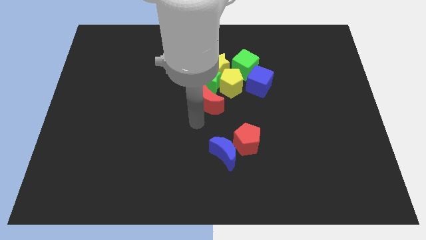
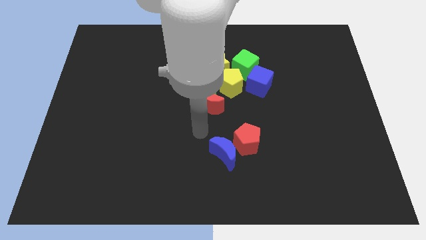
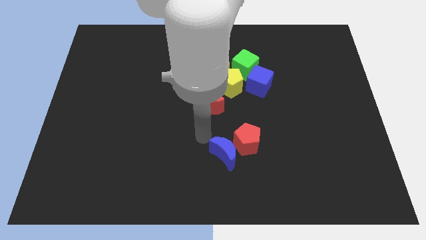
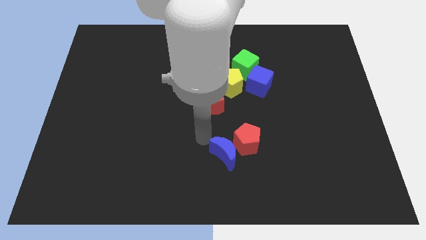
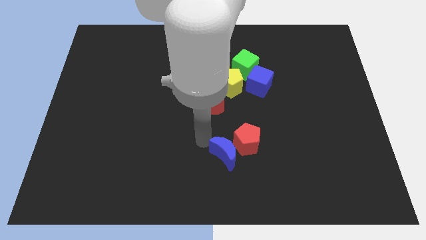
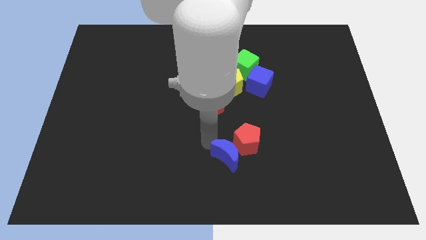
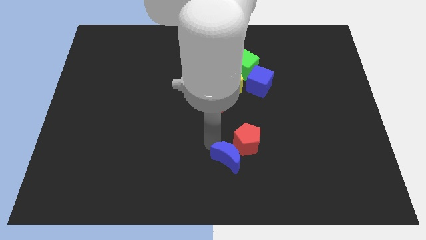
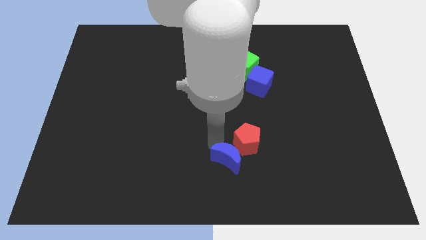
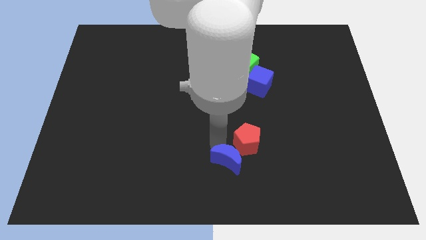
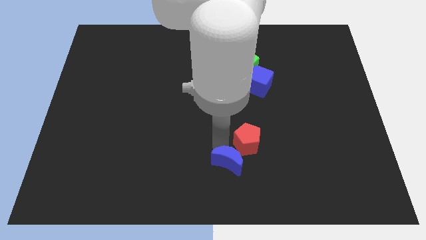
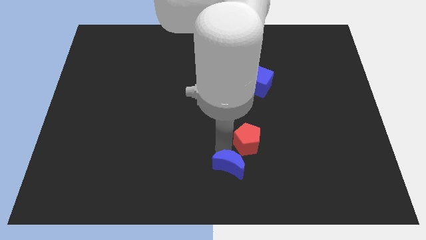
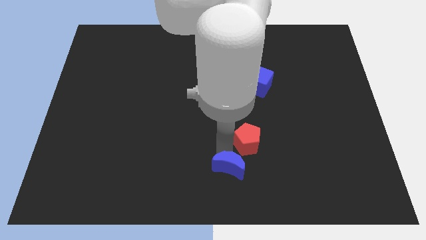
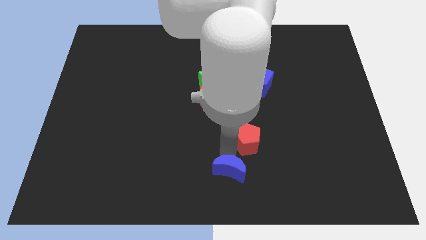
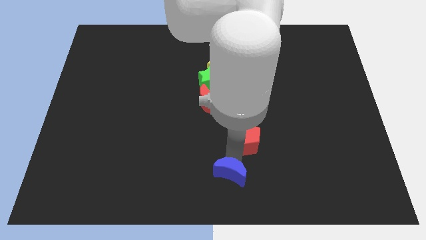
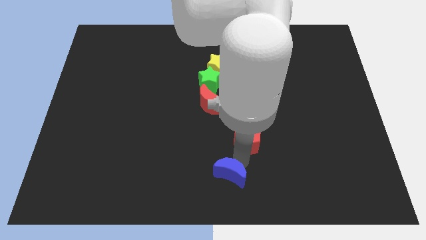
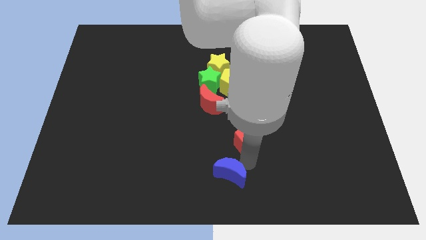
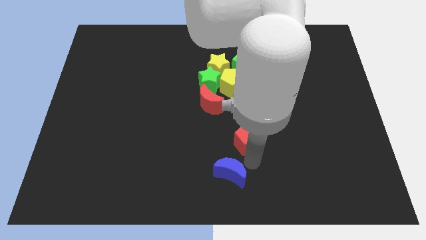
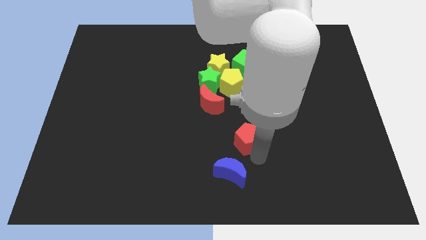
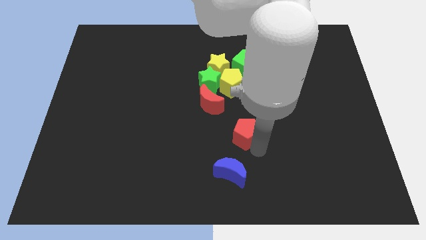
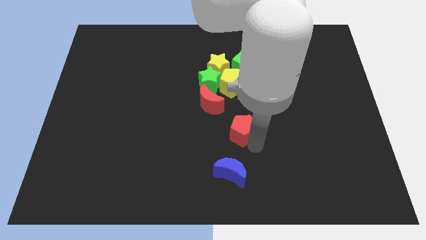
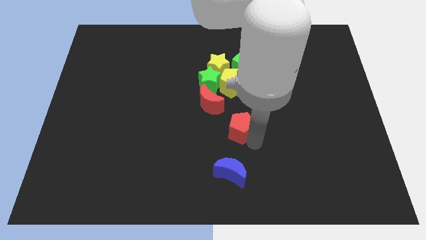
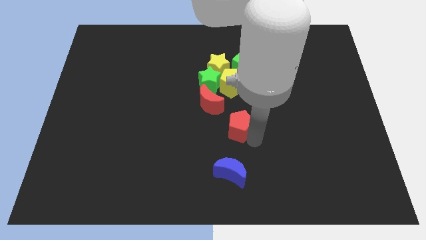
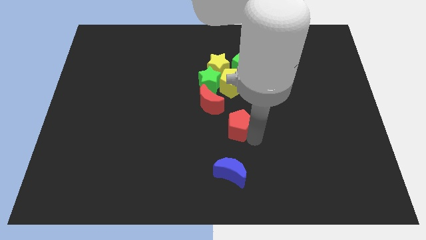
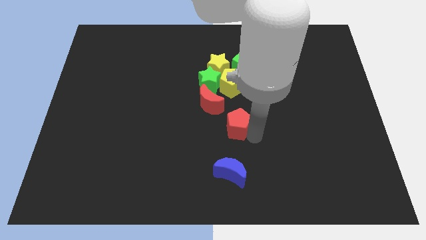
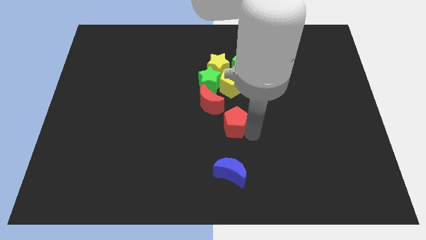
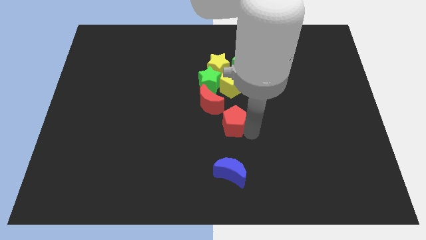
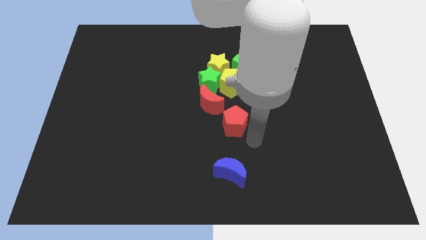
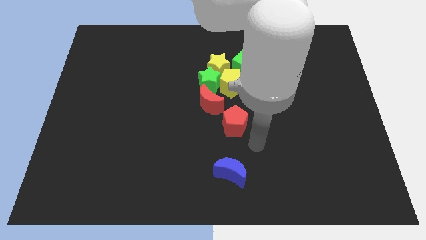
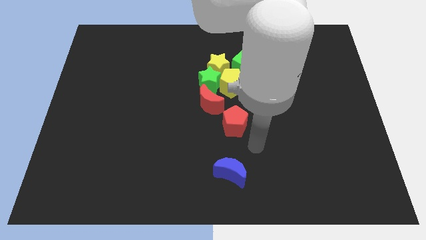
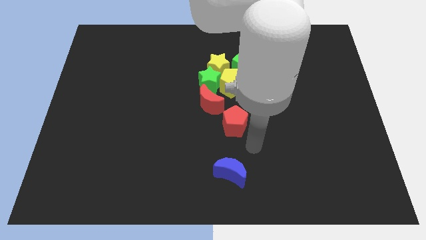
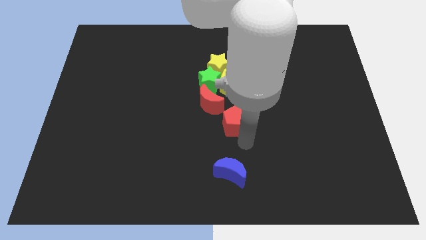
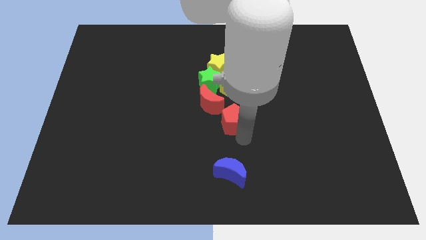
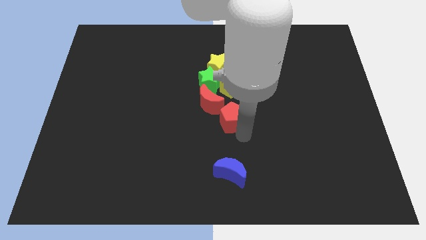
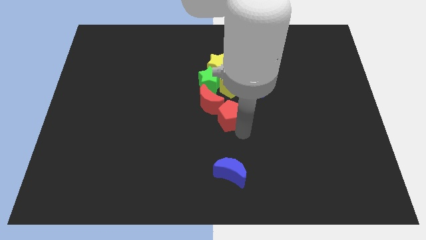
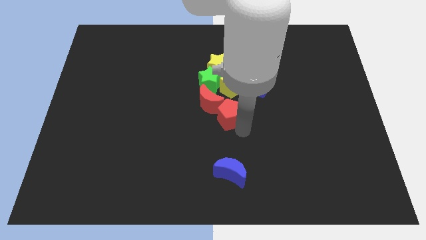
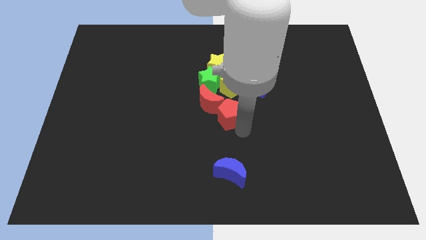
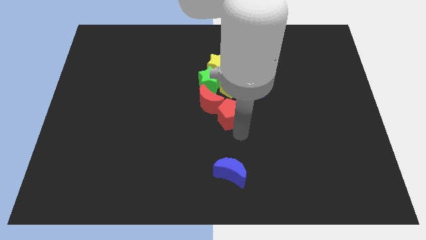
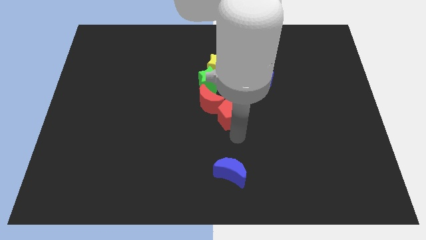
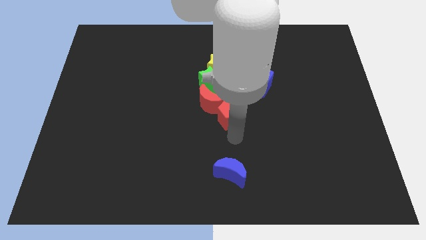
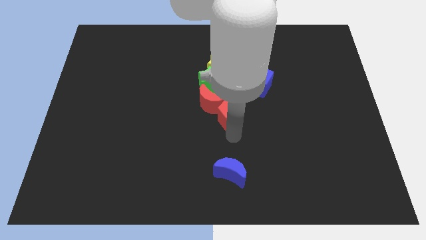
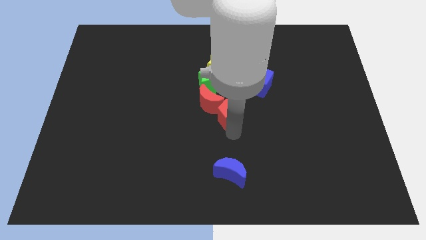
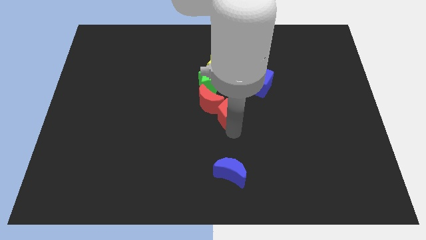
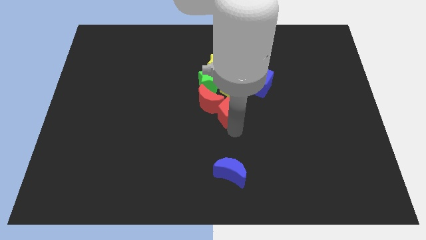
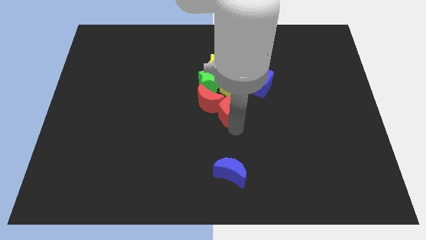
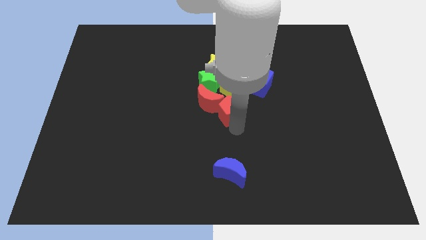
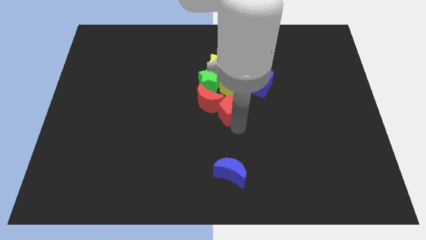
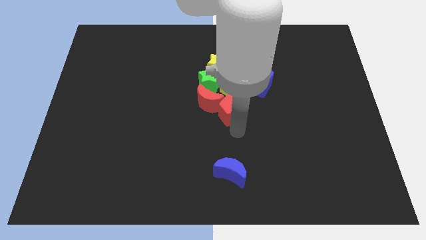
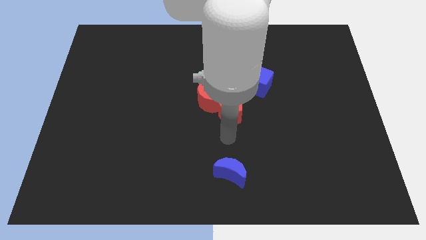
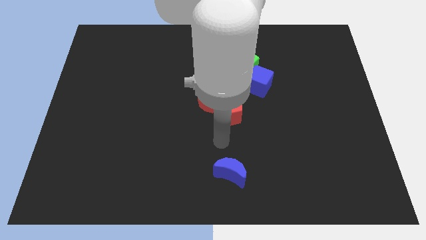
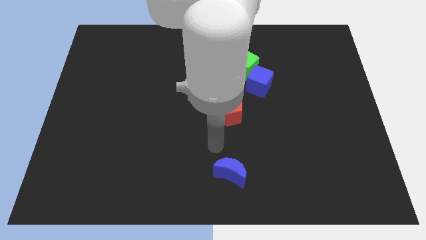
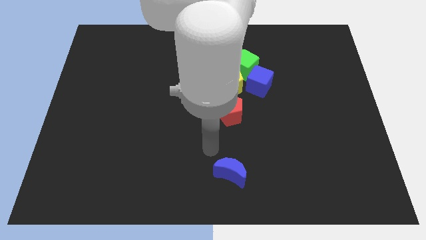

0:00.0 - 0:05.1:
push the red pentagon to the group of blocks

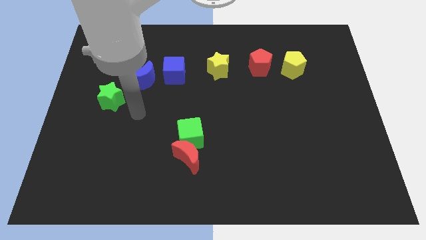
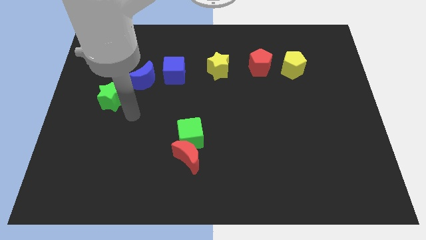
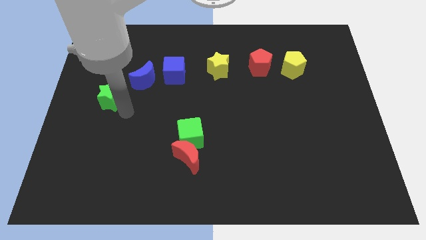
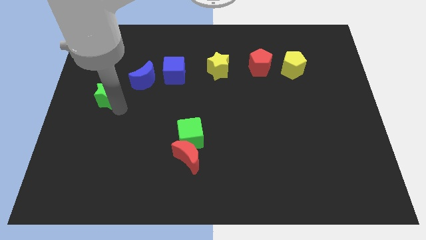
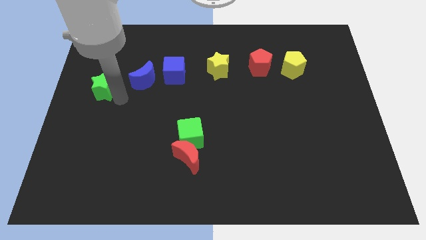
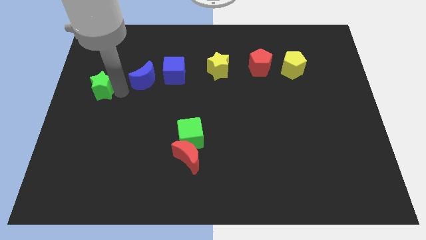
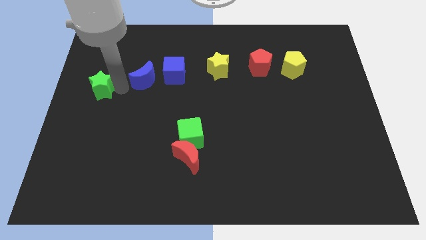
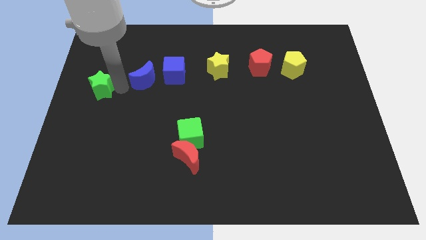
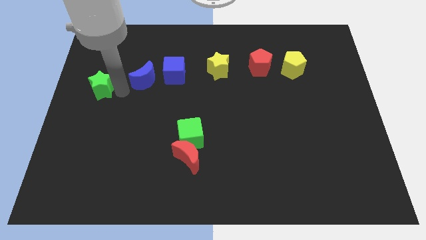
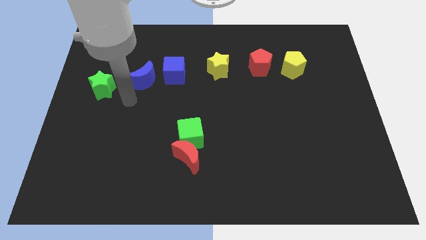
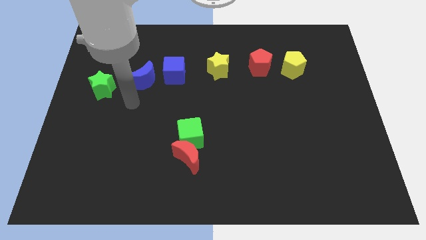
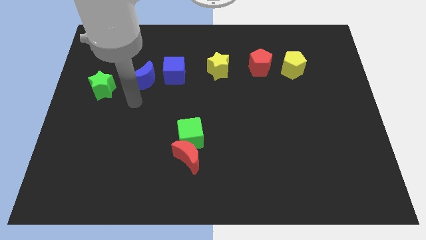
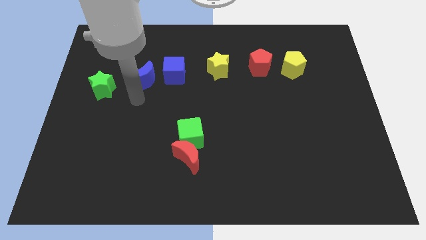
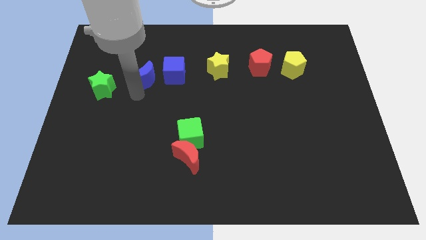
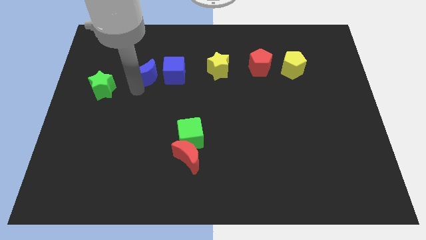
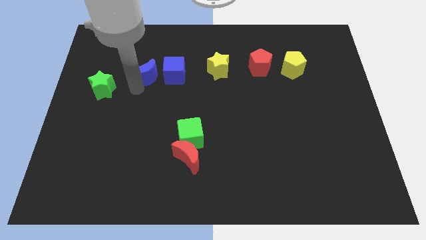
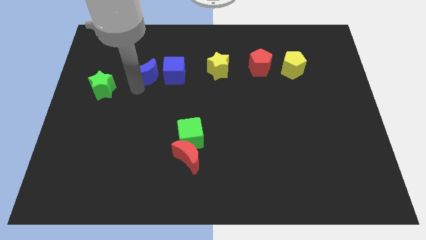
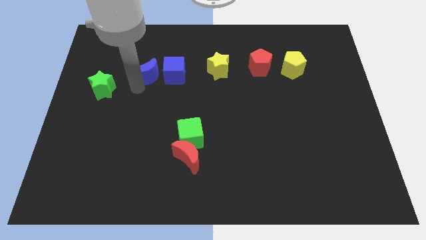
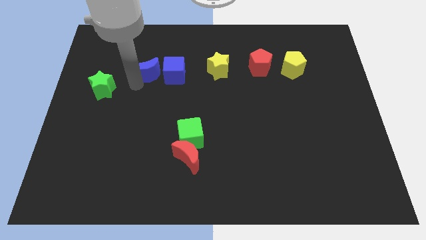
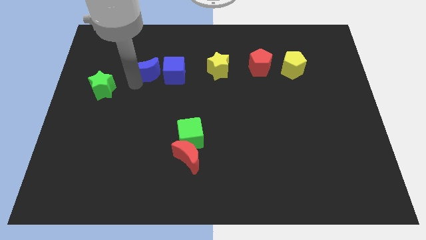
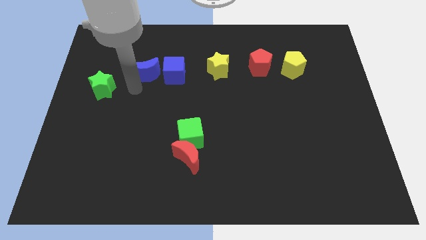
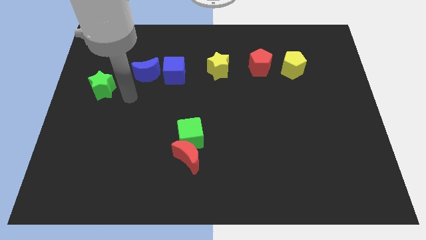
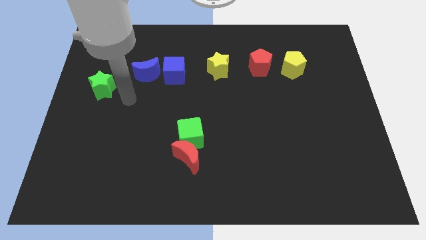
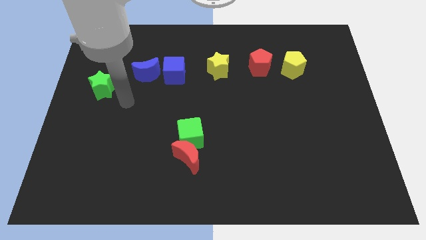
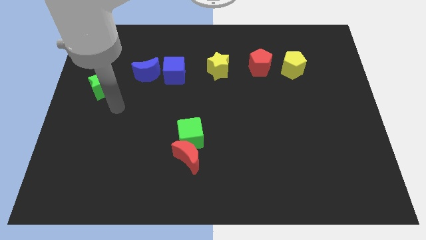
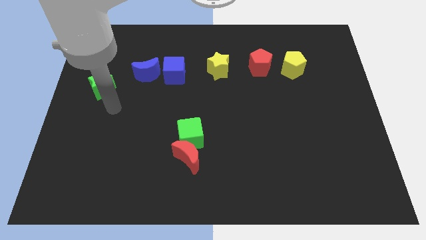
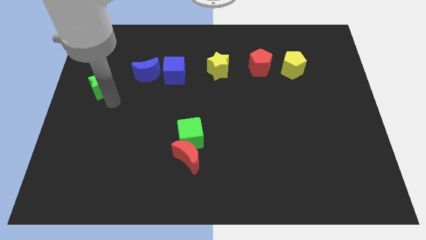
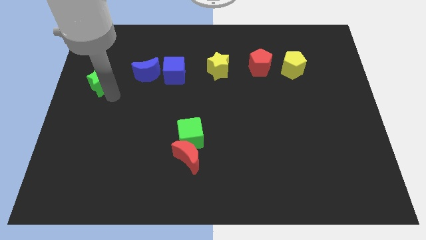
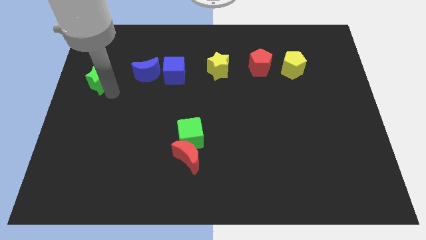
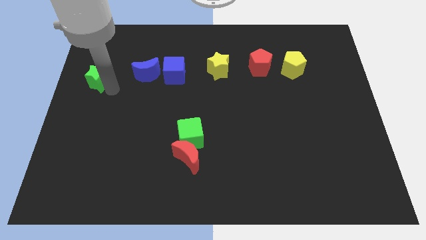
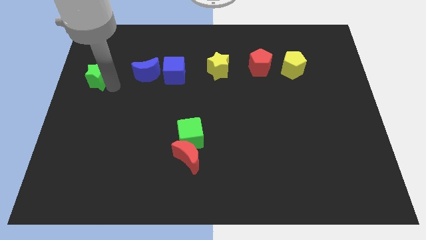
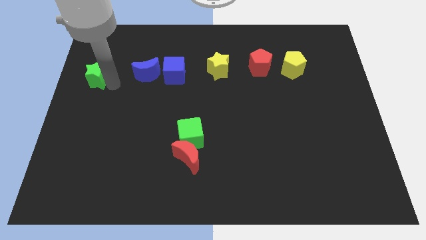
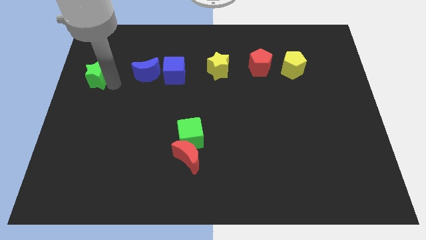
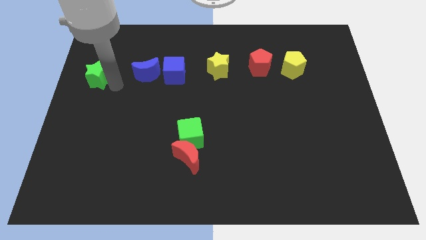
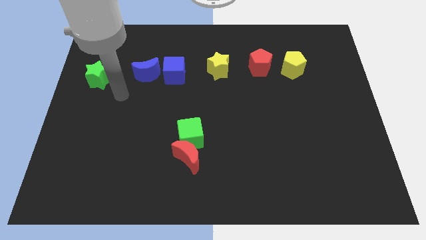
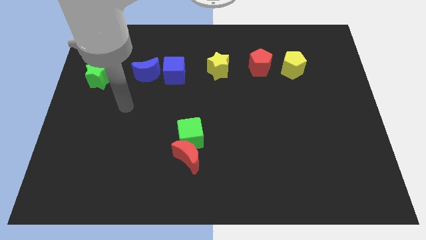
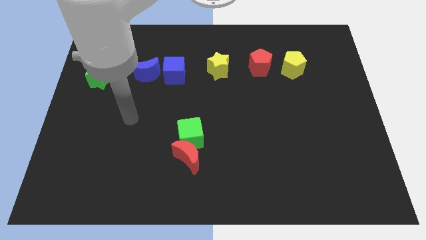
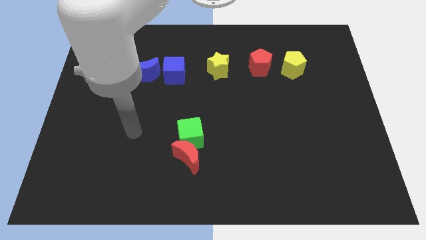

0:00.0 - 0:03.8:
push the green star upwards slightly
